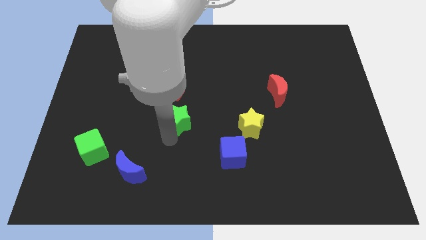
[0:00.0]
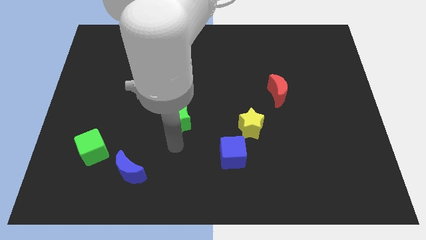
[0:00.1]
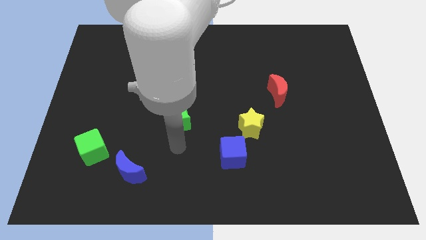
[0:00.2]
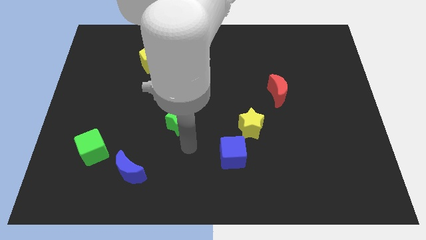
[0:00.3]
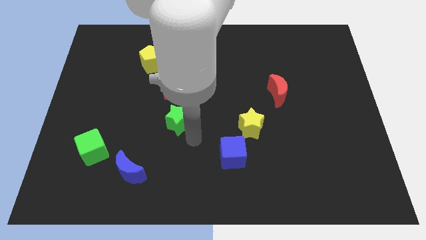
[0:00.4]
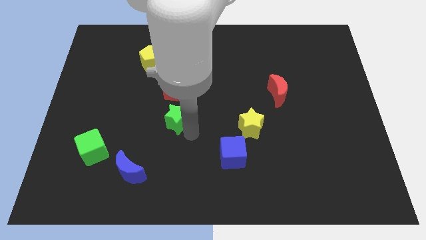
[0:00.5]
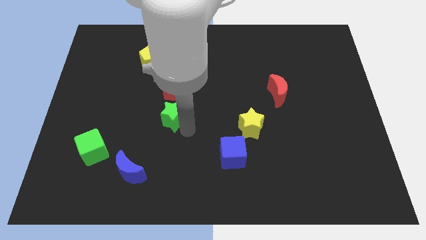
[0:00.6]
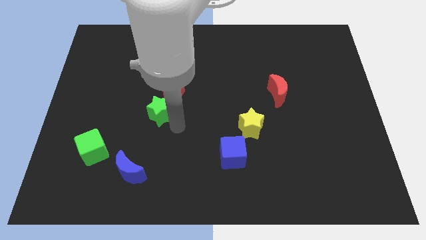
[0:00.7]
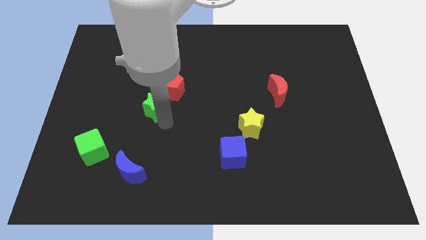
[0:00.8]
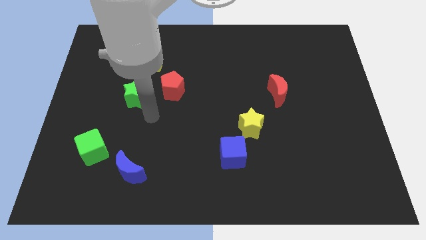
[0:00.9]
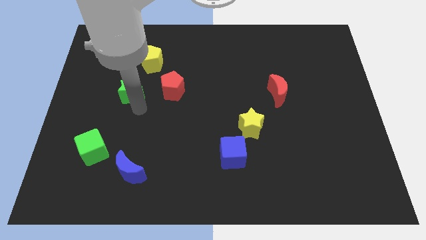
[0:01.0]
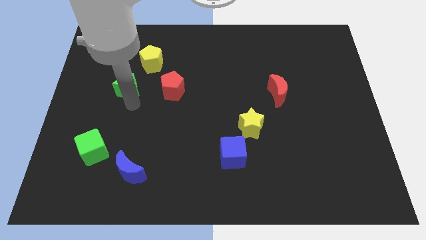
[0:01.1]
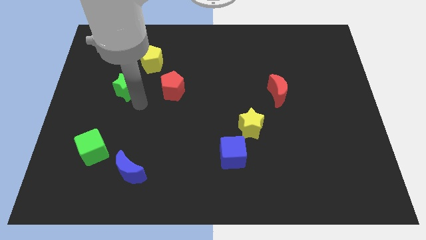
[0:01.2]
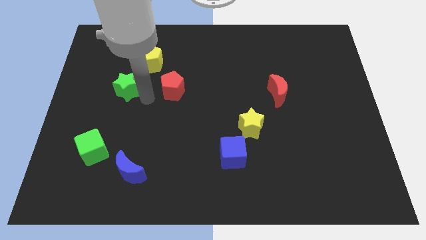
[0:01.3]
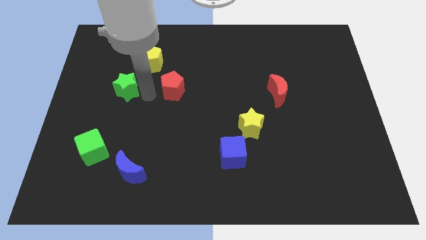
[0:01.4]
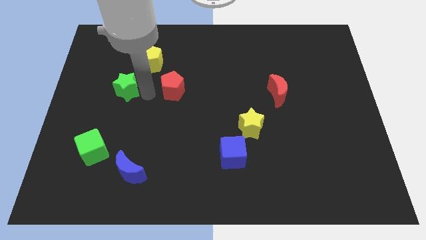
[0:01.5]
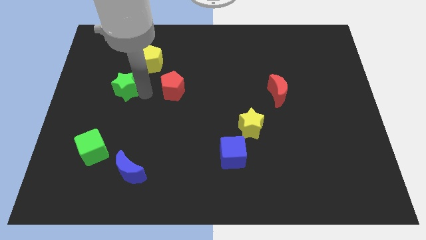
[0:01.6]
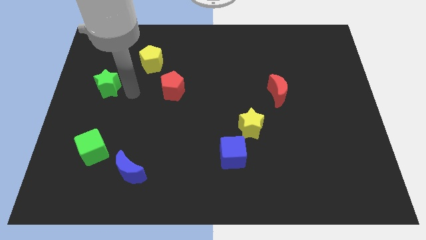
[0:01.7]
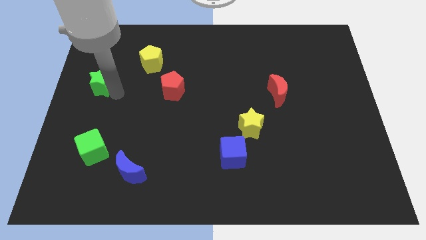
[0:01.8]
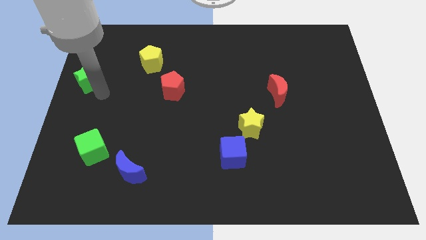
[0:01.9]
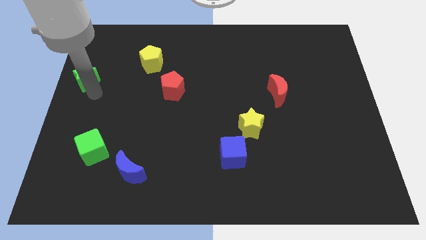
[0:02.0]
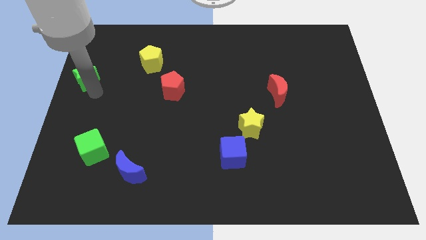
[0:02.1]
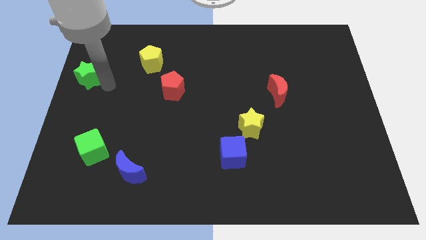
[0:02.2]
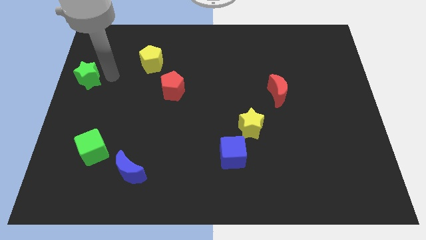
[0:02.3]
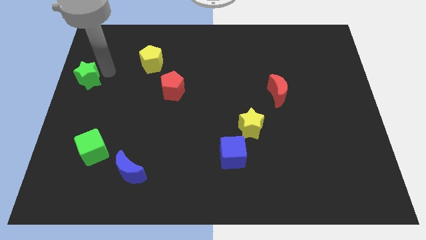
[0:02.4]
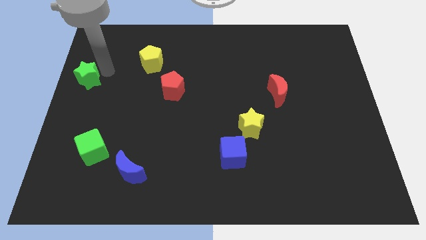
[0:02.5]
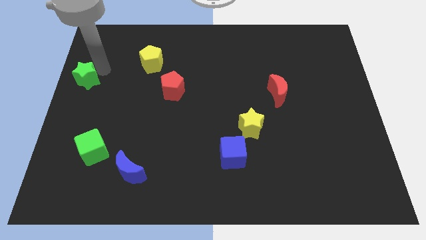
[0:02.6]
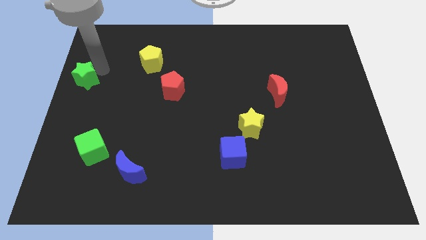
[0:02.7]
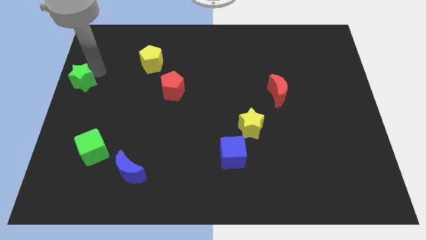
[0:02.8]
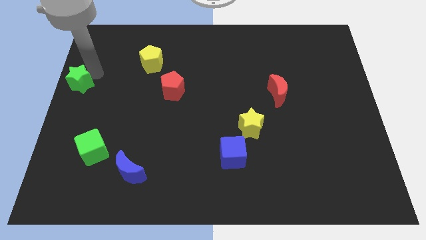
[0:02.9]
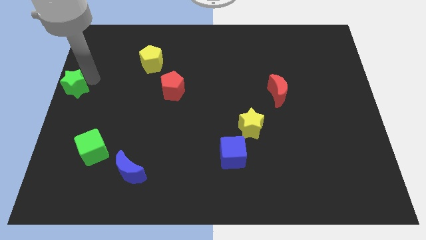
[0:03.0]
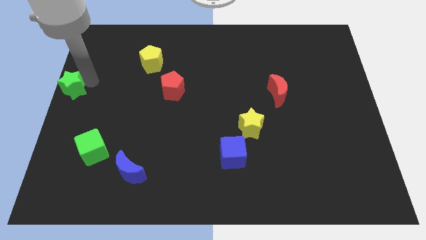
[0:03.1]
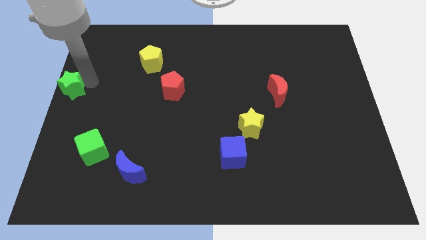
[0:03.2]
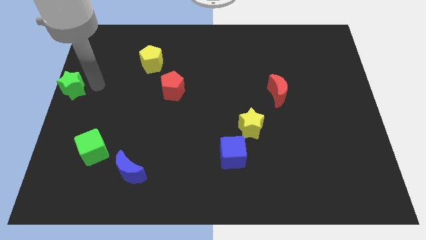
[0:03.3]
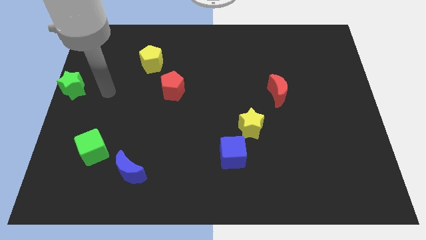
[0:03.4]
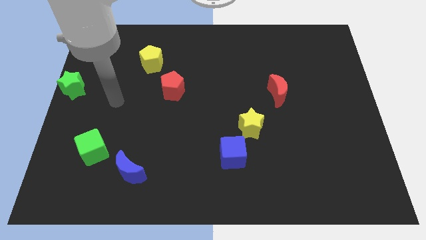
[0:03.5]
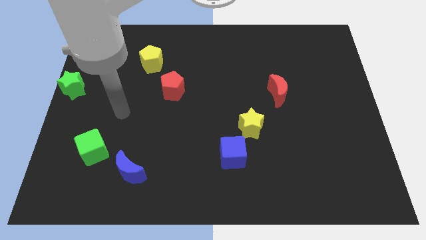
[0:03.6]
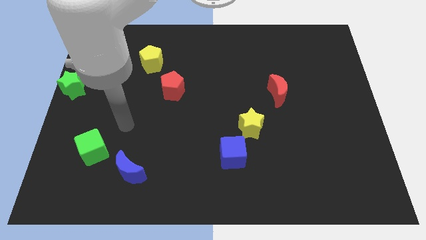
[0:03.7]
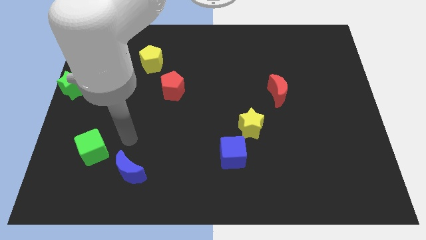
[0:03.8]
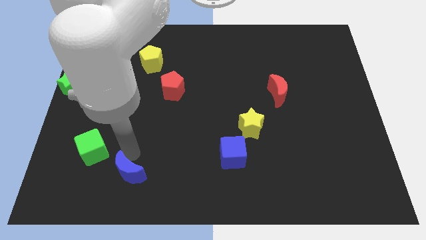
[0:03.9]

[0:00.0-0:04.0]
push the green star into middle left center

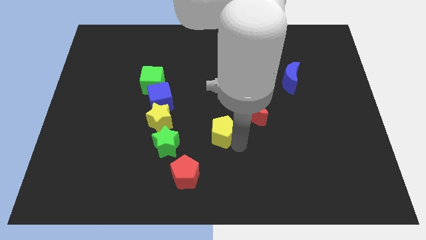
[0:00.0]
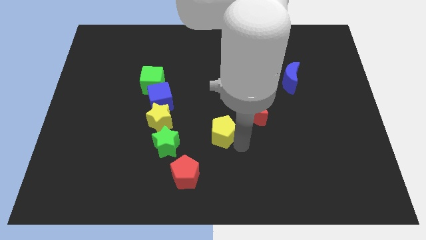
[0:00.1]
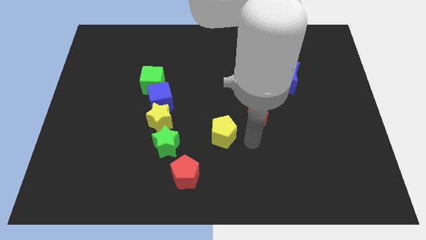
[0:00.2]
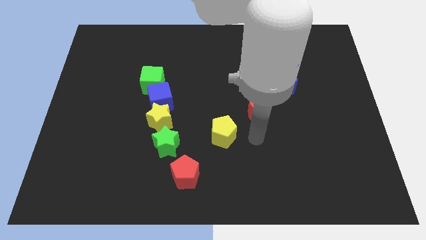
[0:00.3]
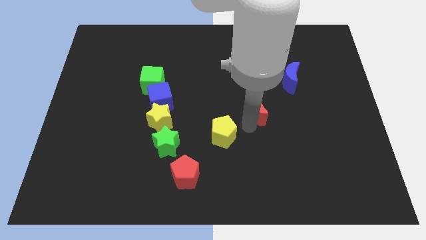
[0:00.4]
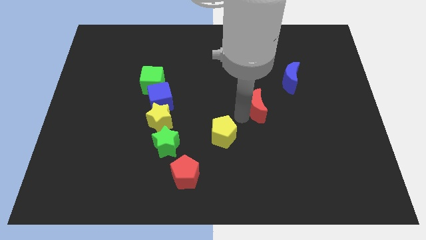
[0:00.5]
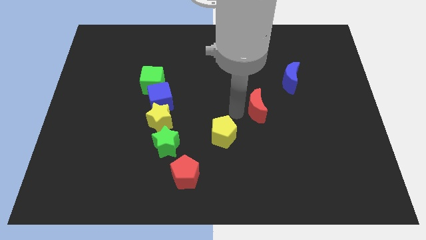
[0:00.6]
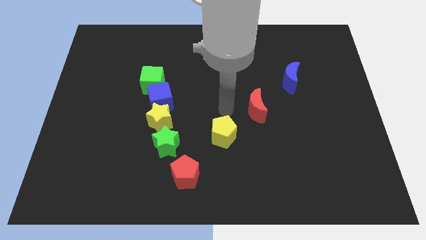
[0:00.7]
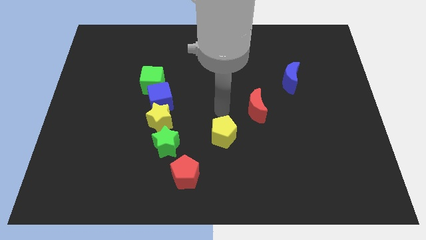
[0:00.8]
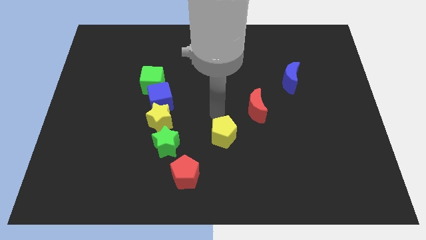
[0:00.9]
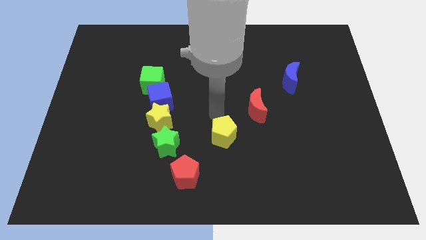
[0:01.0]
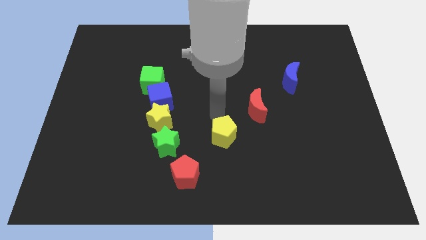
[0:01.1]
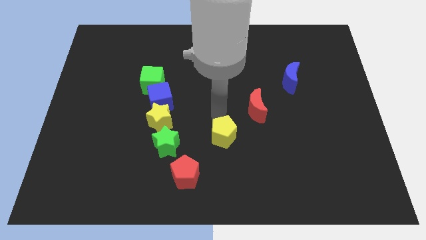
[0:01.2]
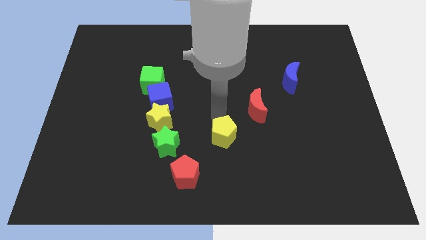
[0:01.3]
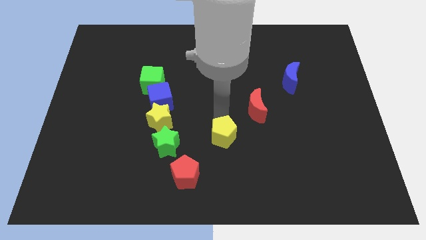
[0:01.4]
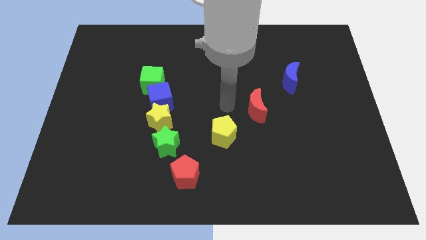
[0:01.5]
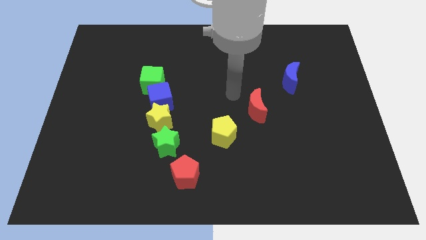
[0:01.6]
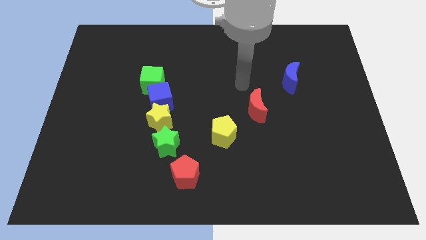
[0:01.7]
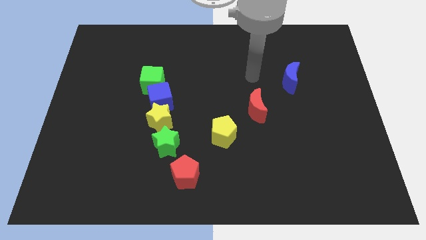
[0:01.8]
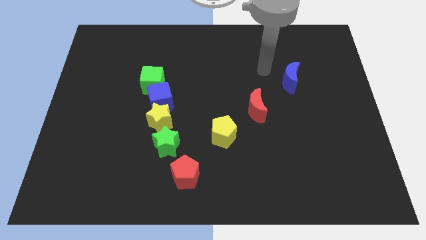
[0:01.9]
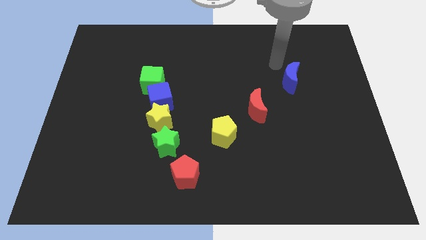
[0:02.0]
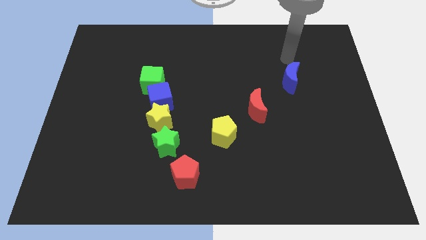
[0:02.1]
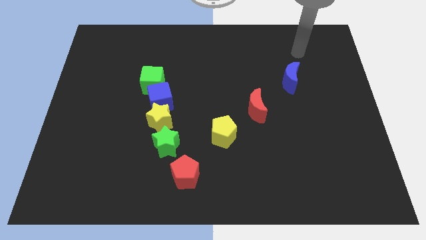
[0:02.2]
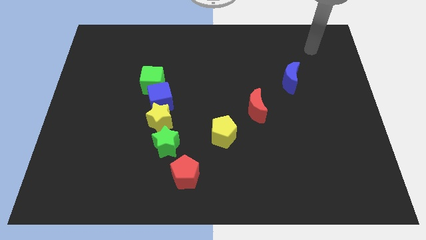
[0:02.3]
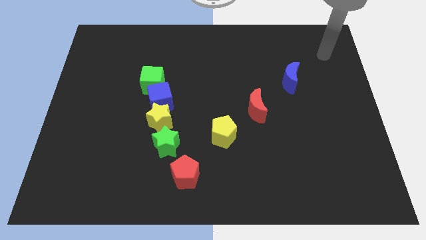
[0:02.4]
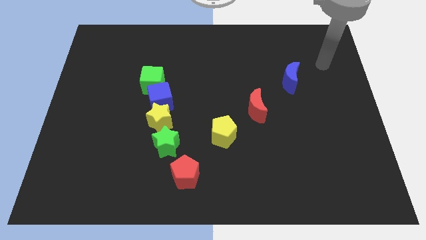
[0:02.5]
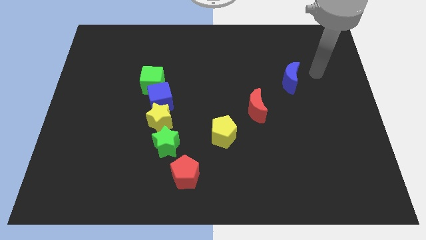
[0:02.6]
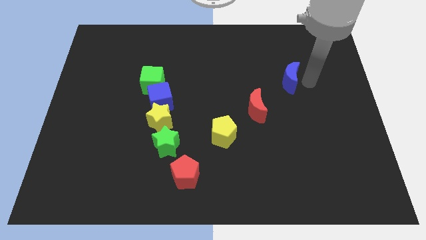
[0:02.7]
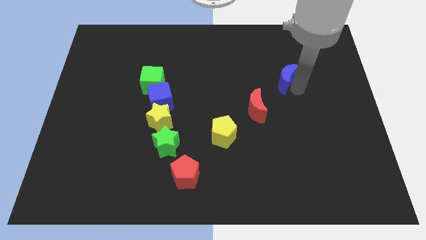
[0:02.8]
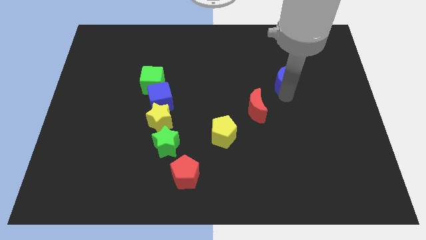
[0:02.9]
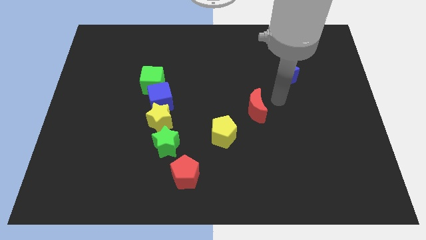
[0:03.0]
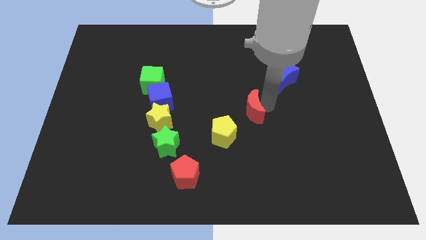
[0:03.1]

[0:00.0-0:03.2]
slide blue moon slightly to the left

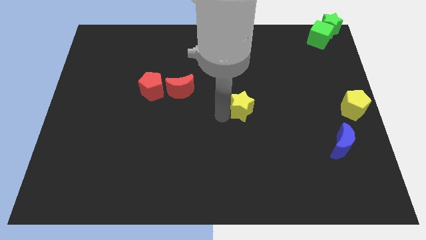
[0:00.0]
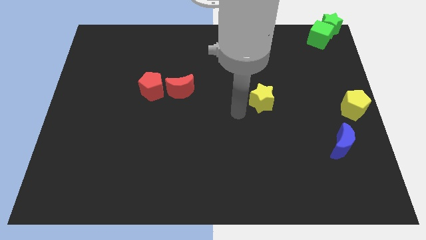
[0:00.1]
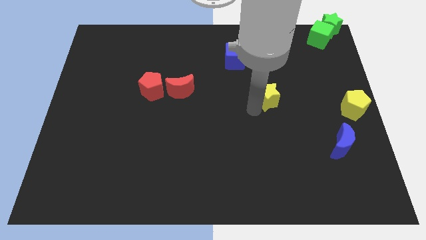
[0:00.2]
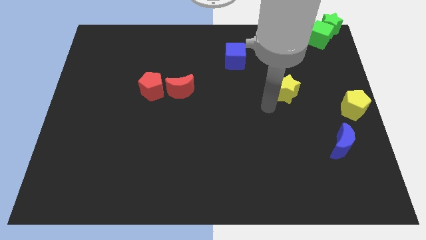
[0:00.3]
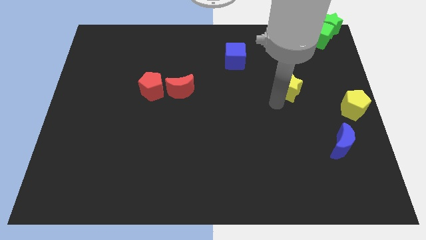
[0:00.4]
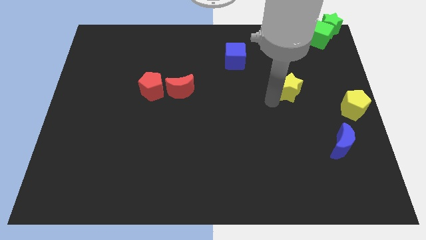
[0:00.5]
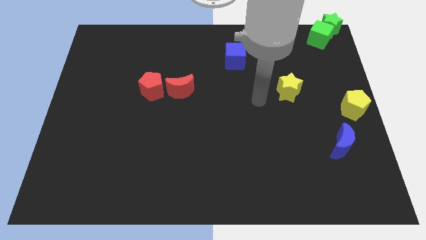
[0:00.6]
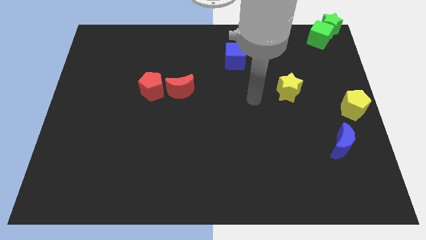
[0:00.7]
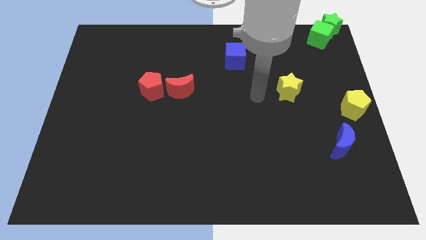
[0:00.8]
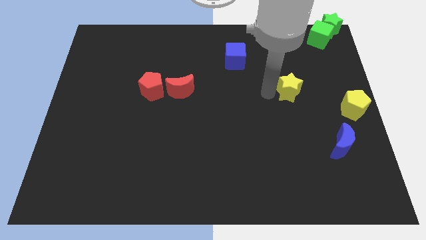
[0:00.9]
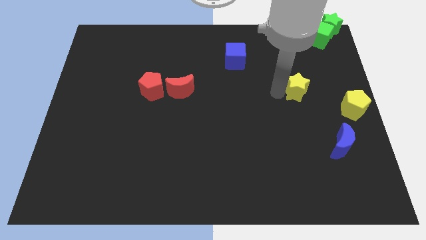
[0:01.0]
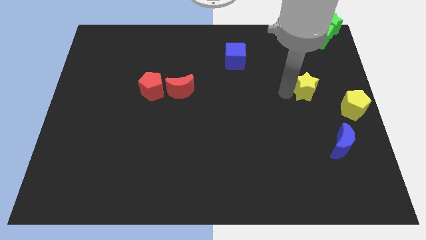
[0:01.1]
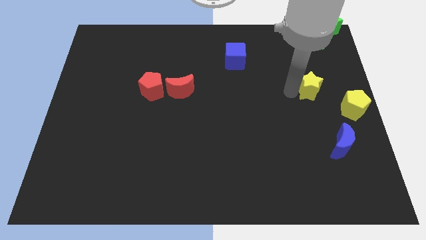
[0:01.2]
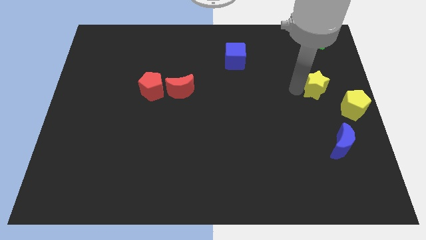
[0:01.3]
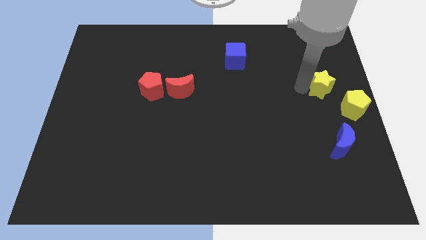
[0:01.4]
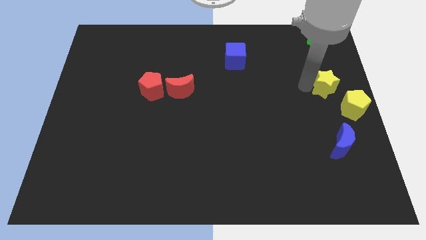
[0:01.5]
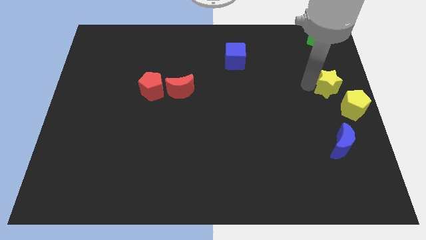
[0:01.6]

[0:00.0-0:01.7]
push the yellow star close to the yellow pentagon

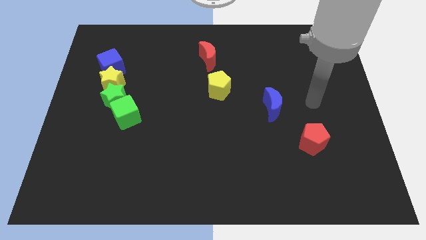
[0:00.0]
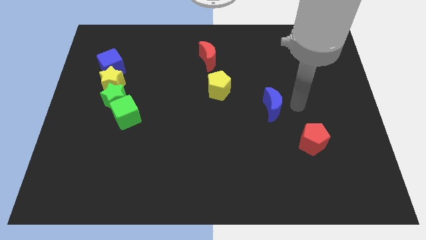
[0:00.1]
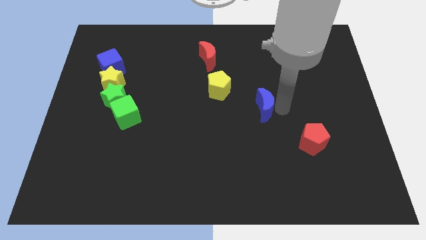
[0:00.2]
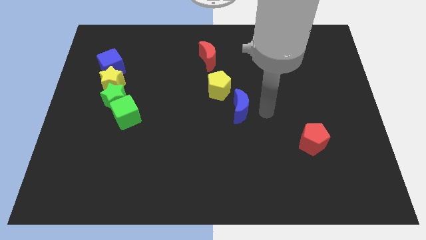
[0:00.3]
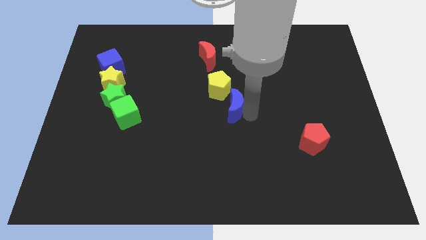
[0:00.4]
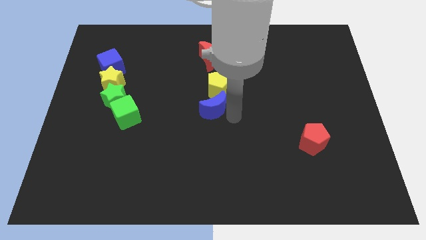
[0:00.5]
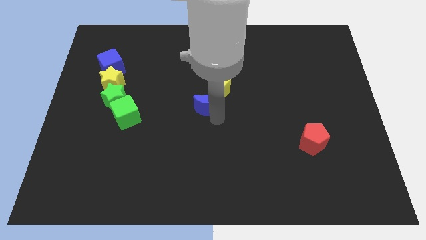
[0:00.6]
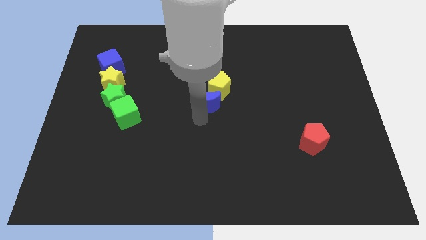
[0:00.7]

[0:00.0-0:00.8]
place the blue moon below the yellow pentagon
